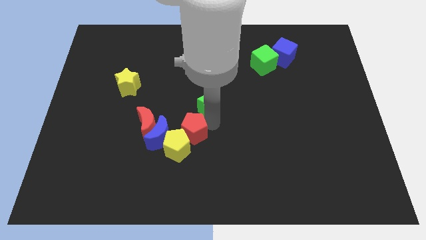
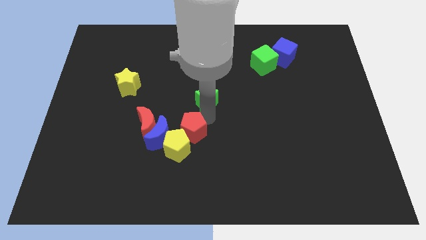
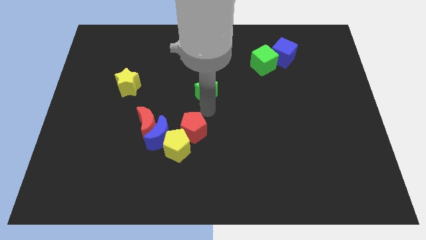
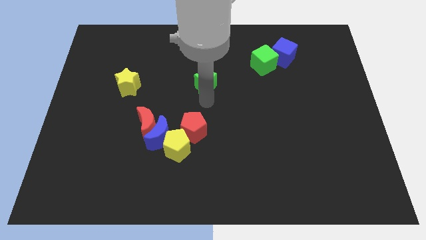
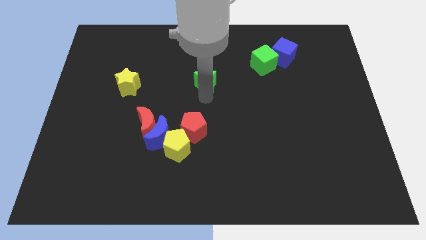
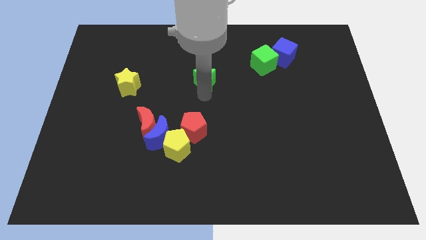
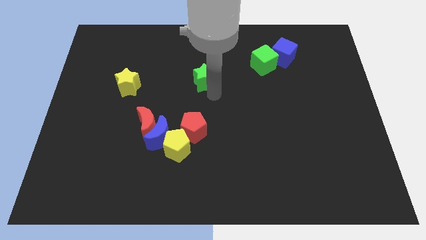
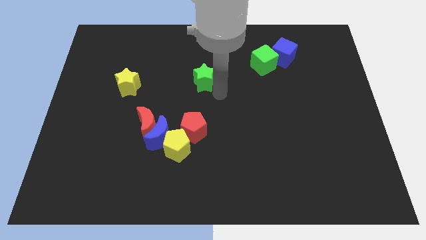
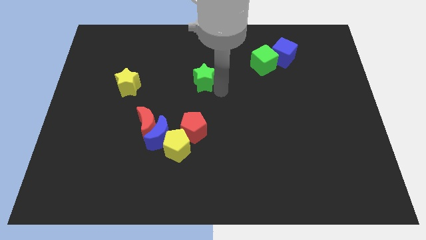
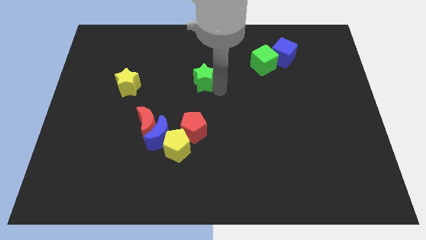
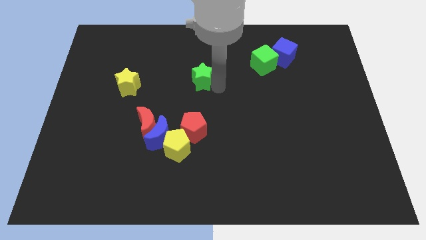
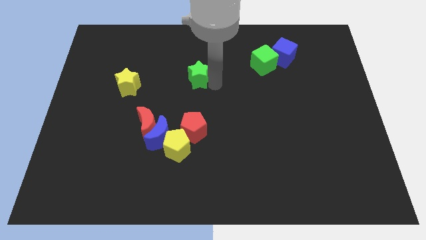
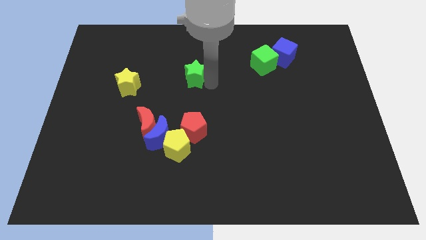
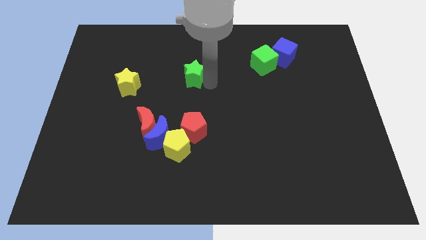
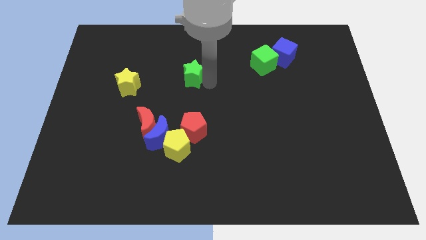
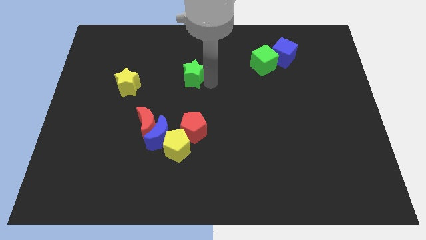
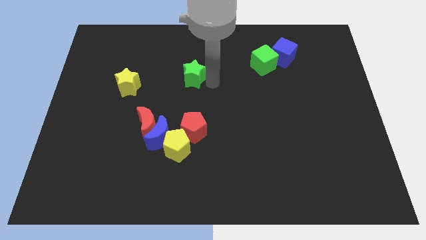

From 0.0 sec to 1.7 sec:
place green star to the right of yellow star

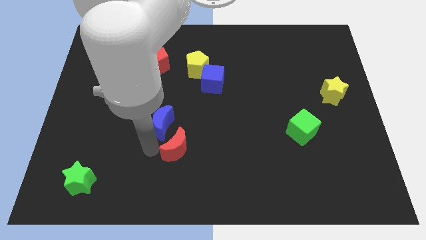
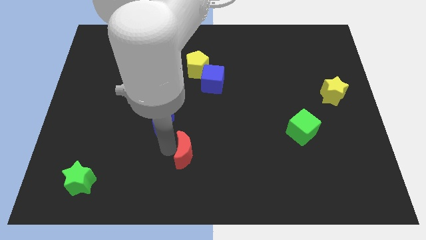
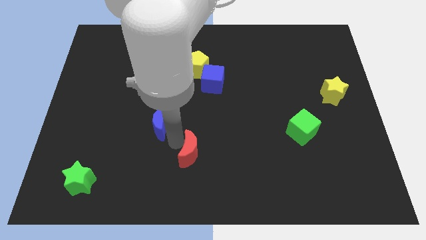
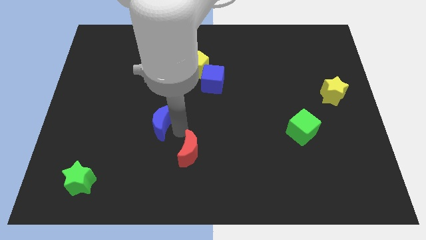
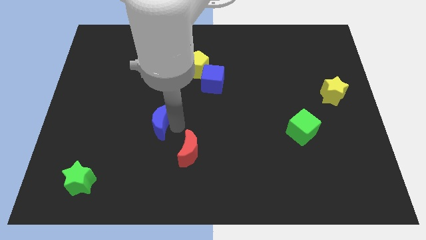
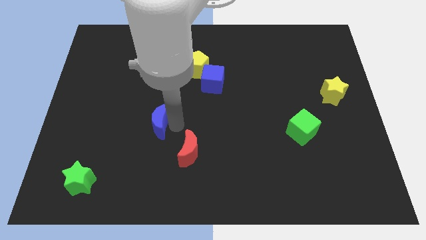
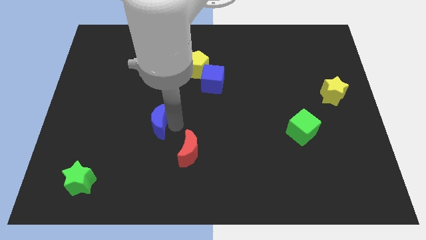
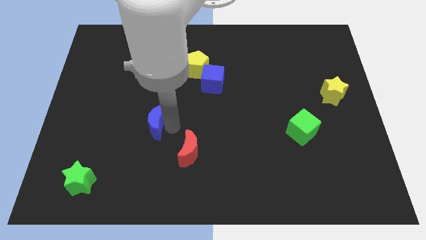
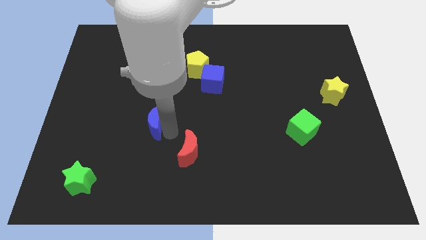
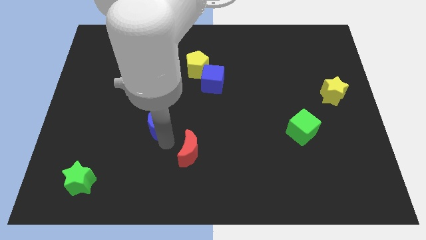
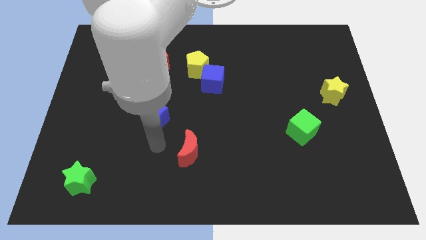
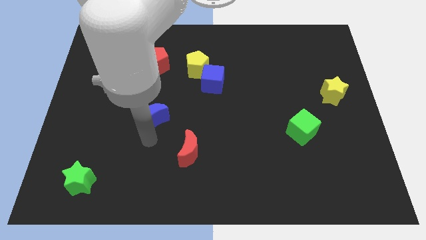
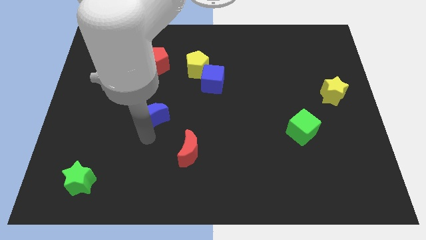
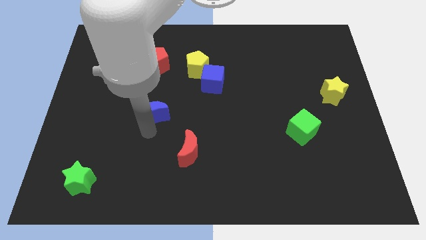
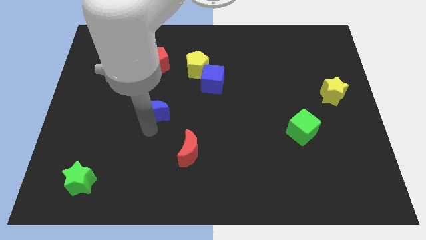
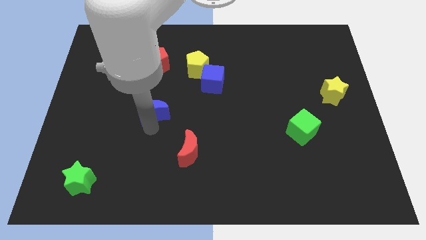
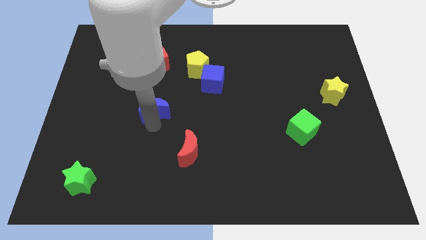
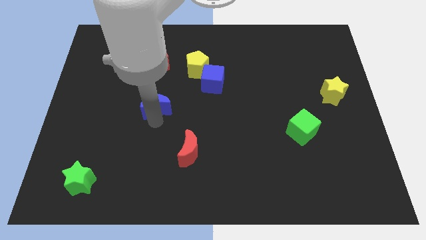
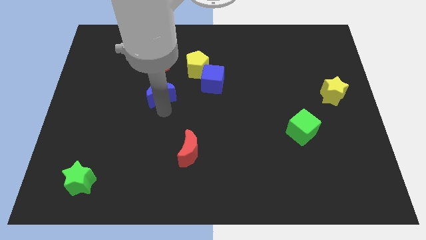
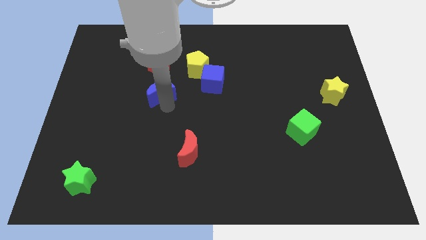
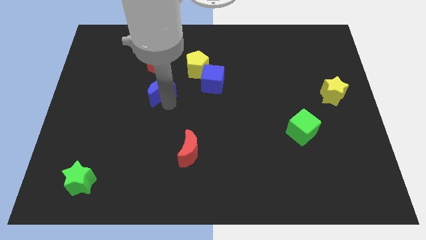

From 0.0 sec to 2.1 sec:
separate blue and red moons

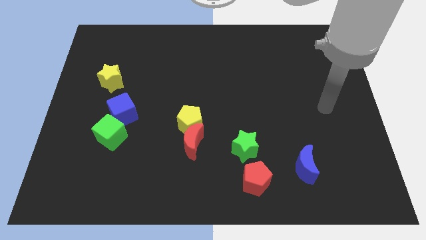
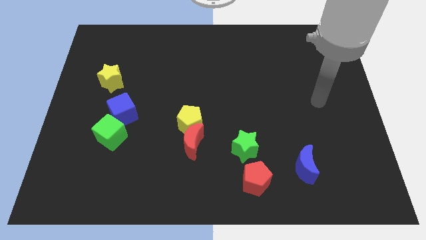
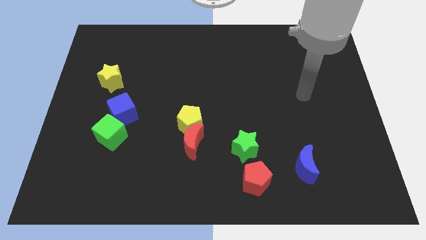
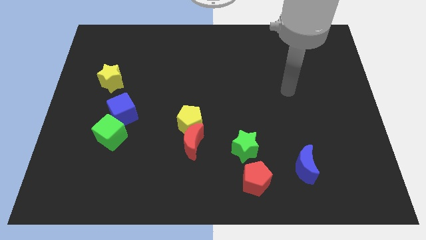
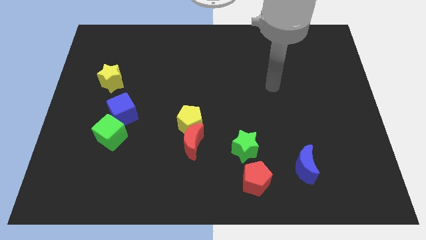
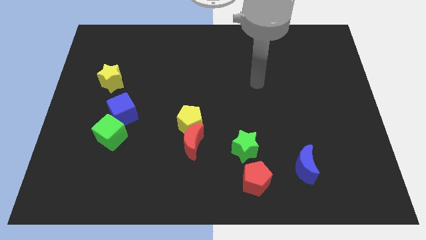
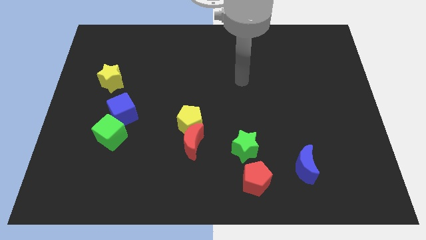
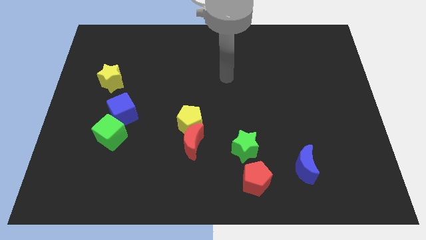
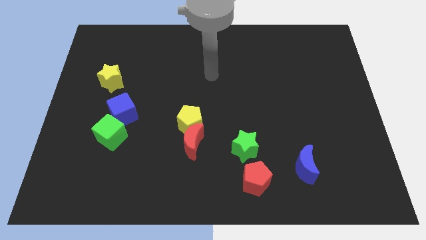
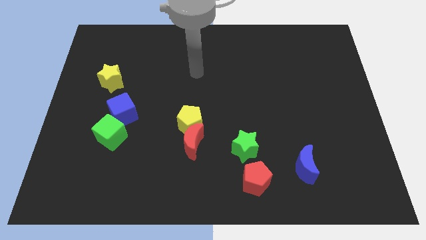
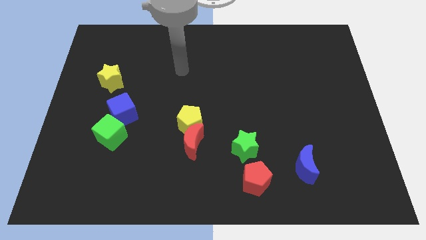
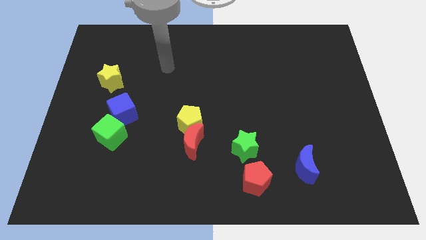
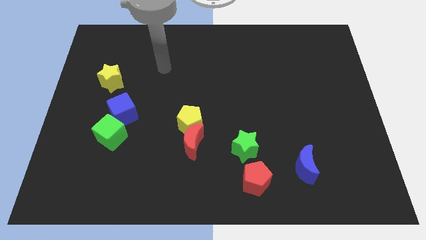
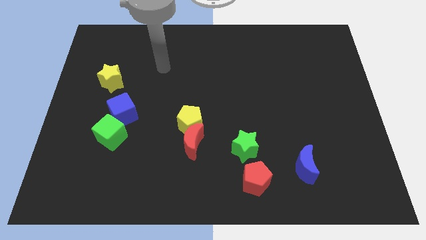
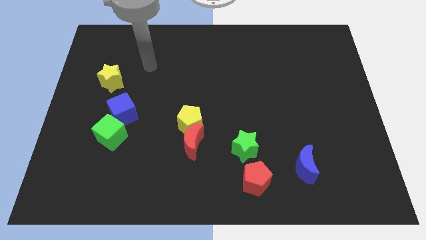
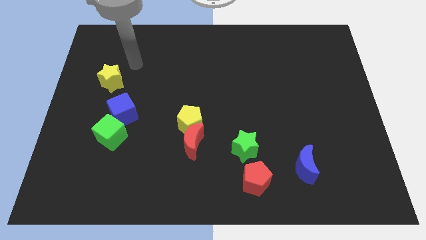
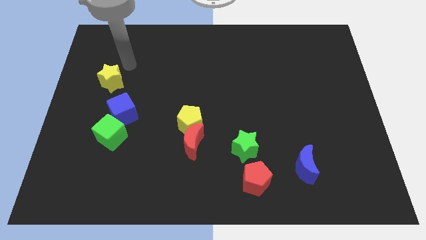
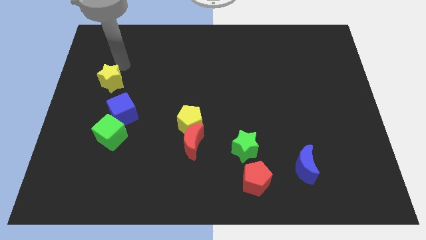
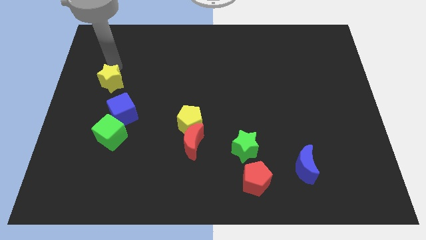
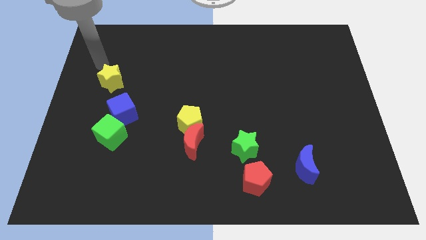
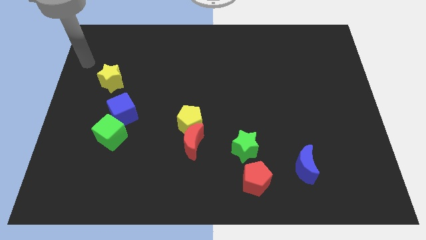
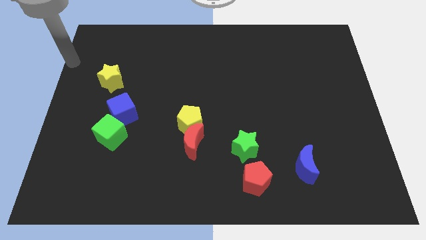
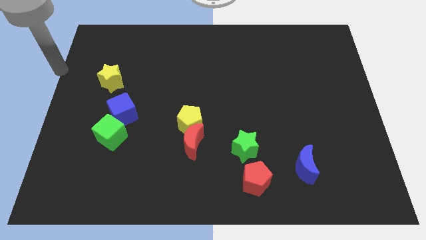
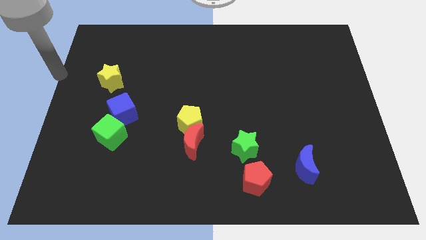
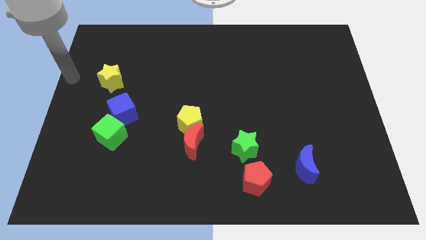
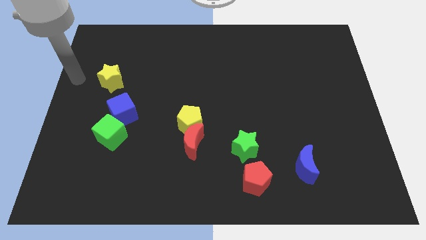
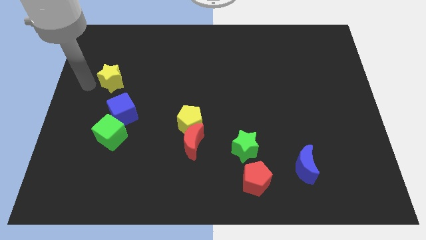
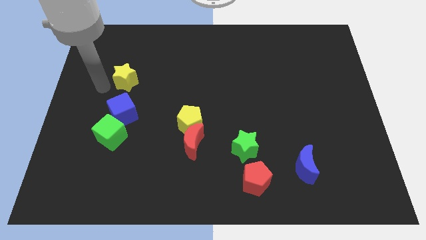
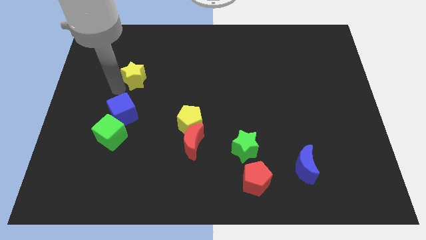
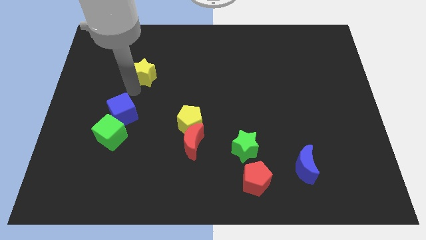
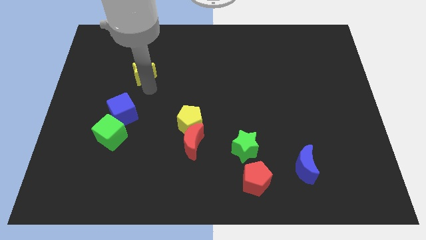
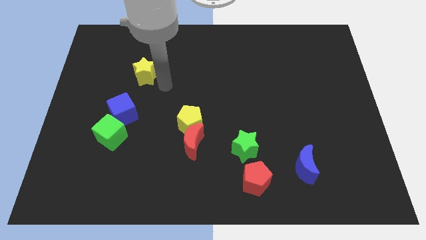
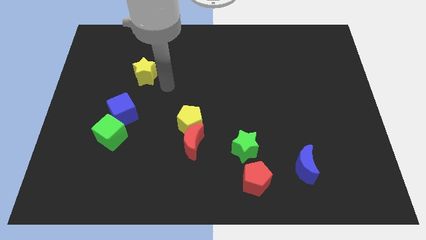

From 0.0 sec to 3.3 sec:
push the yellow star to the top side of the blue cube

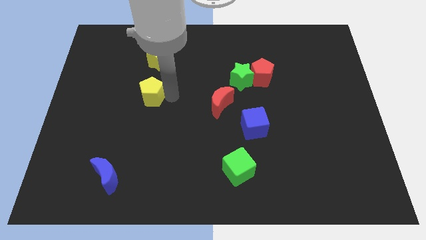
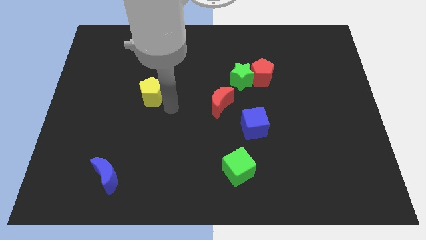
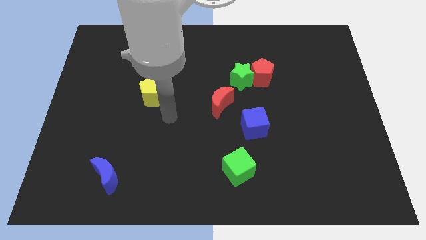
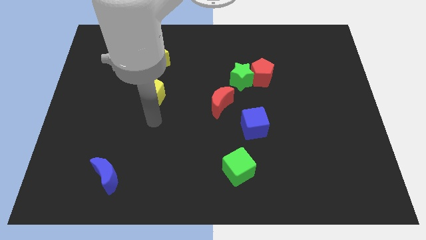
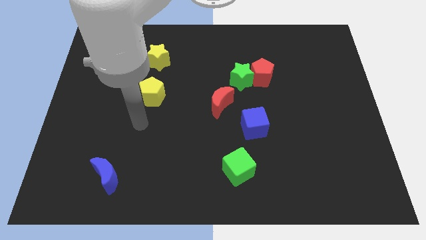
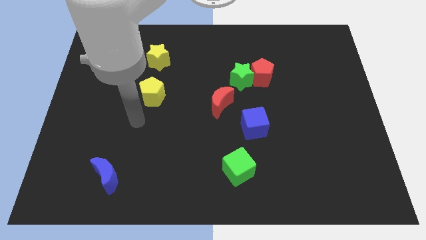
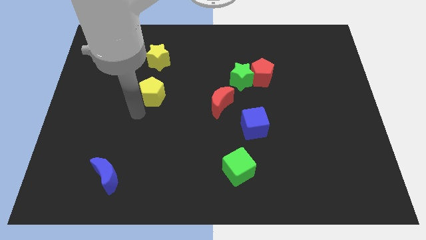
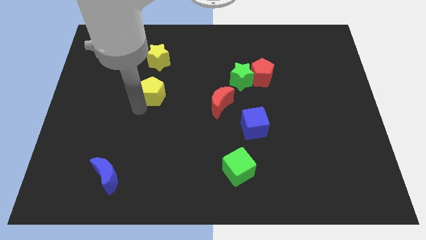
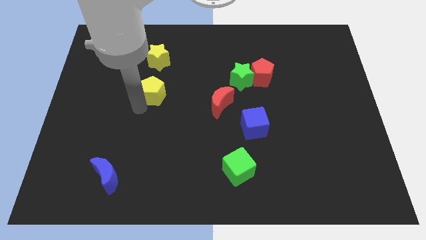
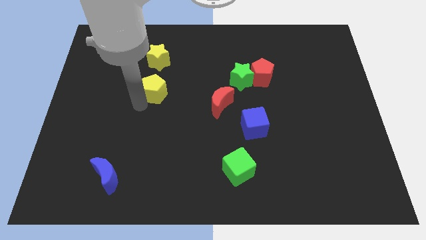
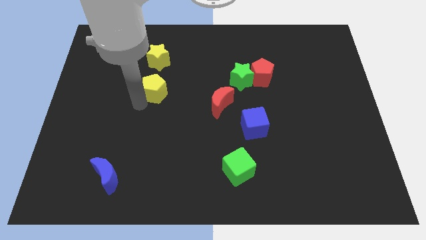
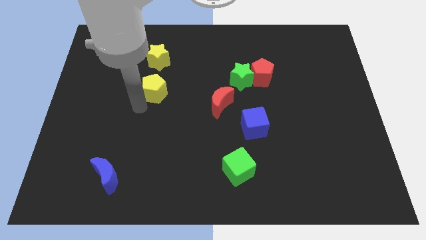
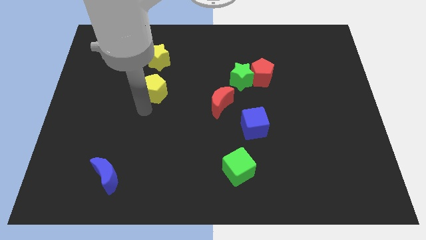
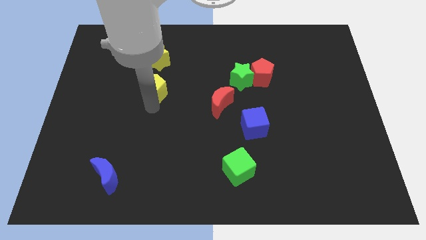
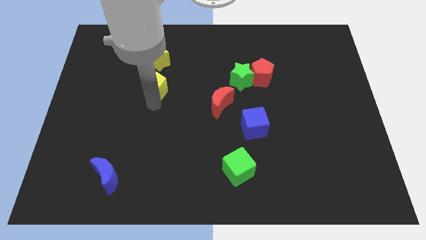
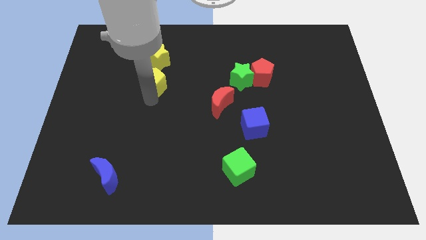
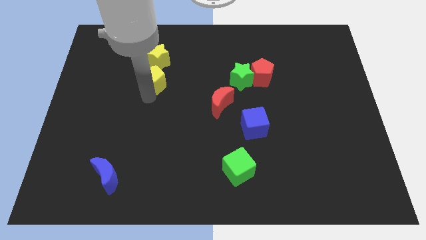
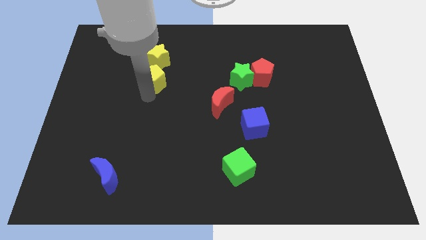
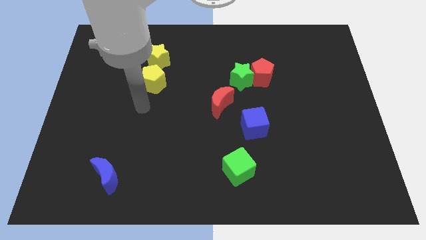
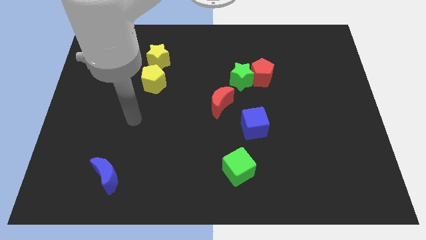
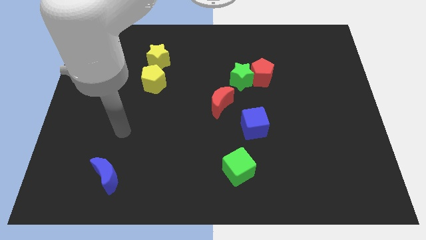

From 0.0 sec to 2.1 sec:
push yellow pentagon towards the yellow star
